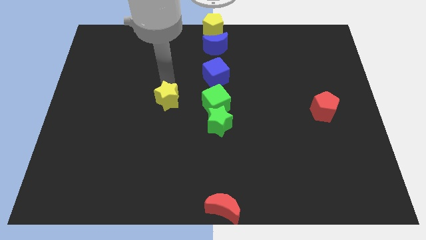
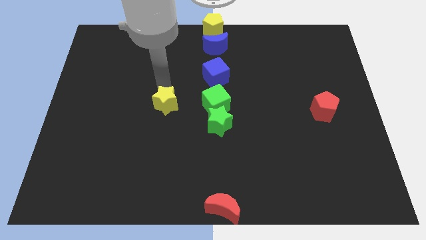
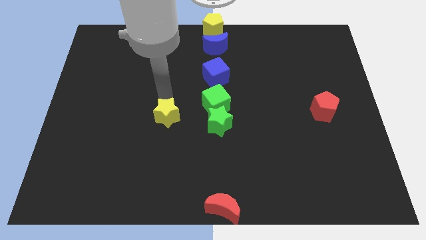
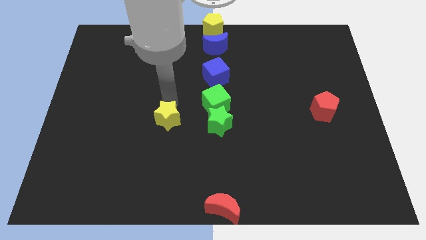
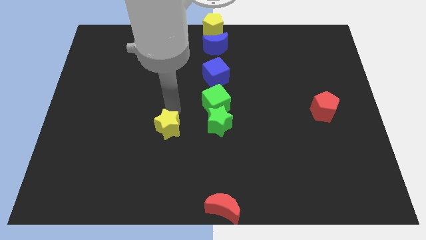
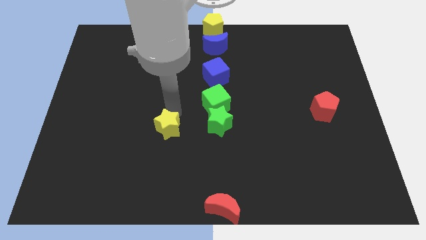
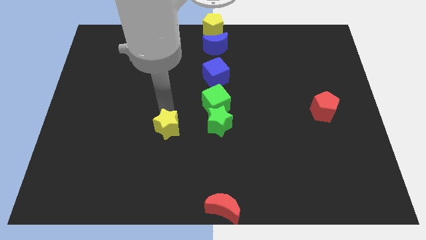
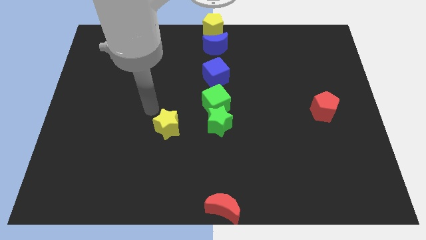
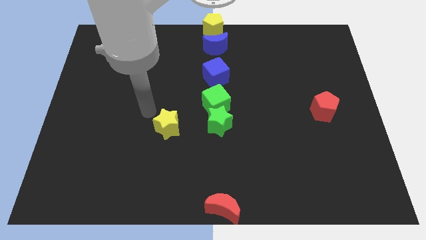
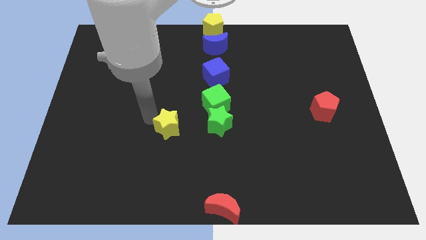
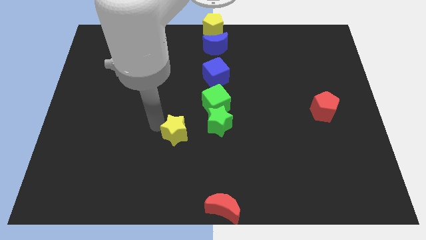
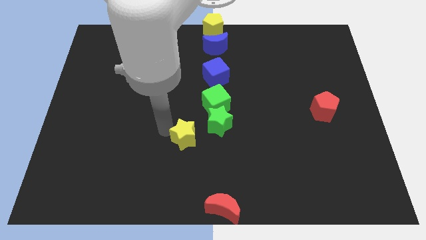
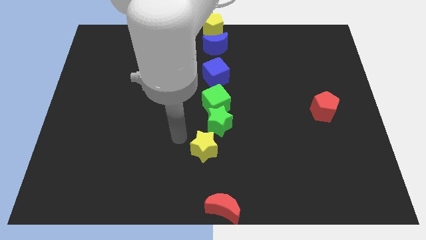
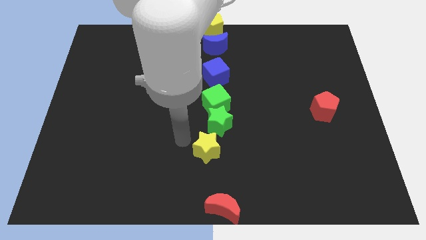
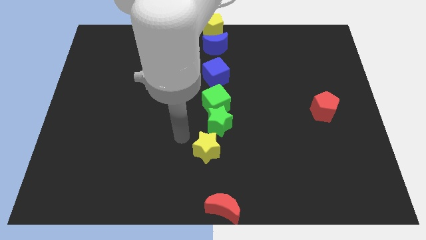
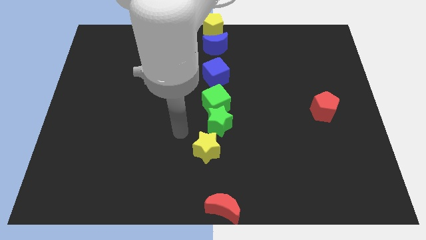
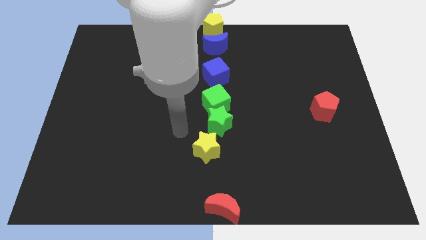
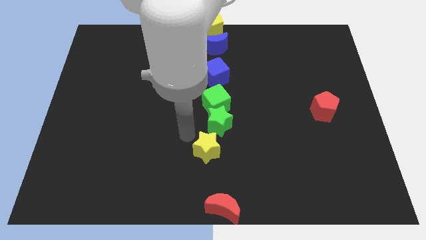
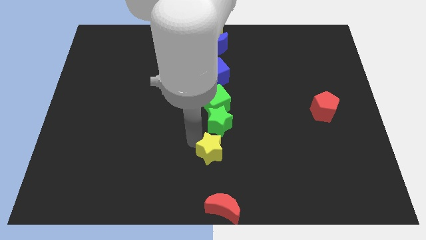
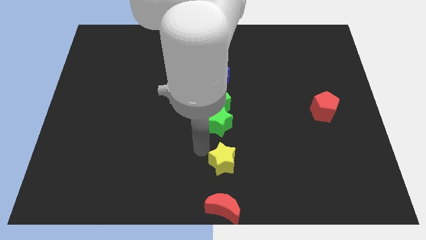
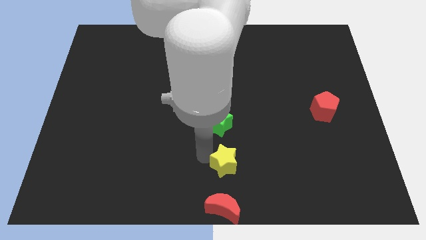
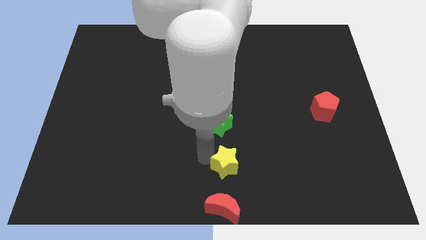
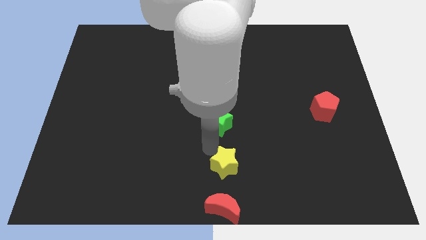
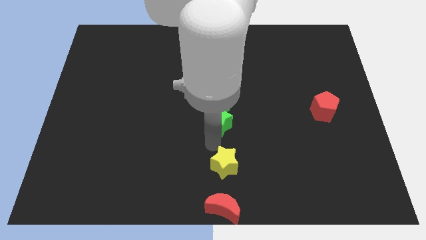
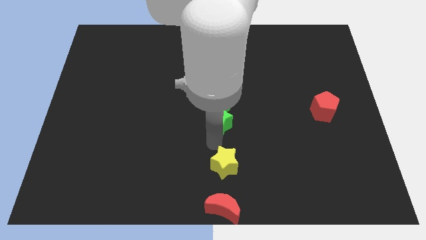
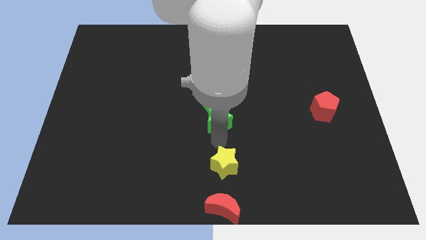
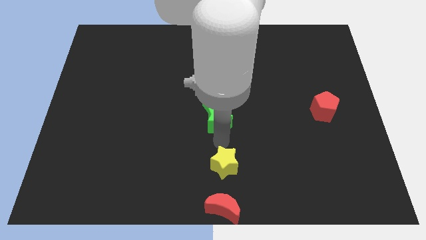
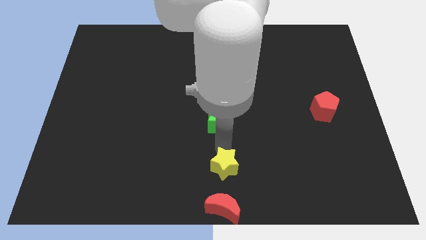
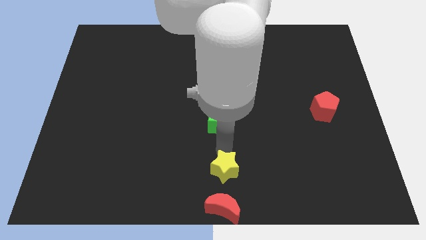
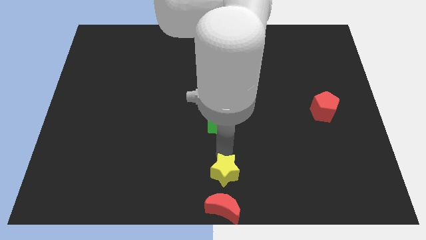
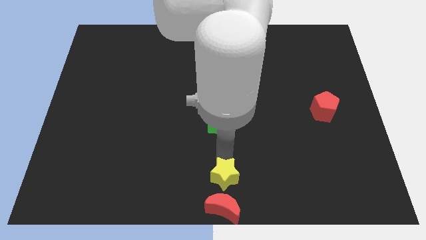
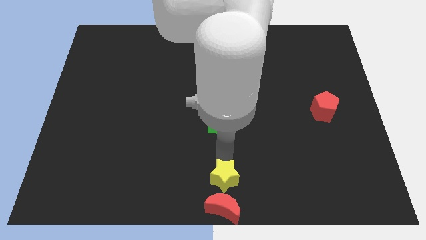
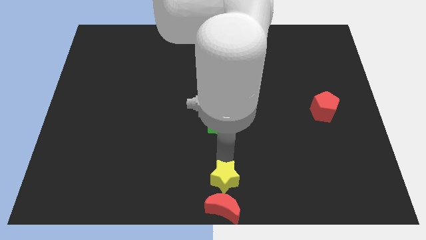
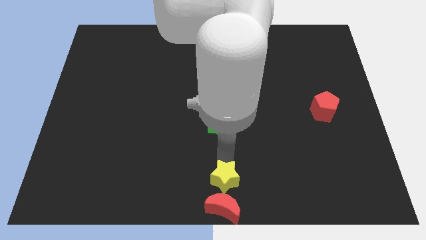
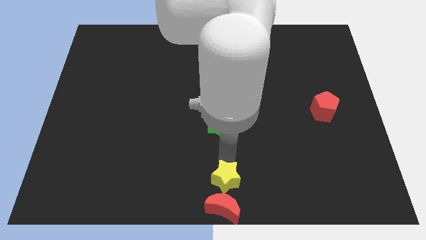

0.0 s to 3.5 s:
place the yellow star to the top of red crescent

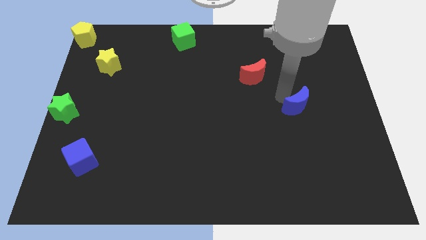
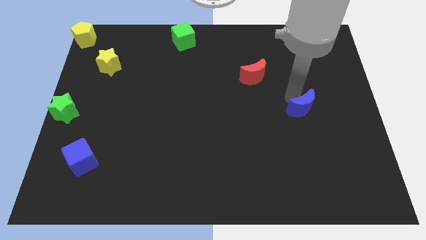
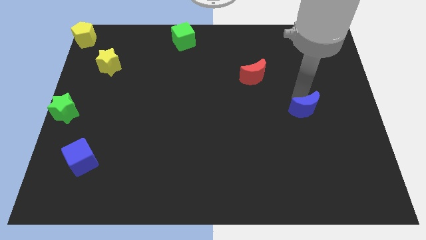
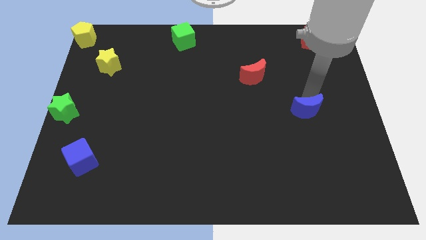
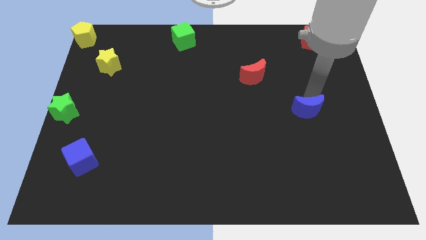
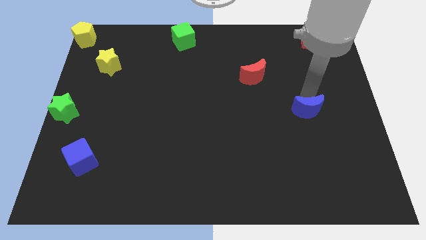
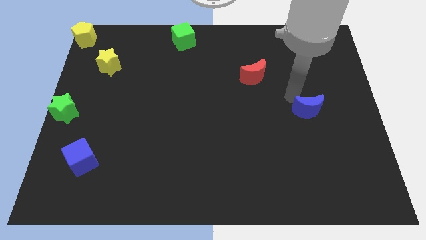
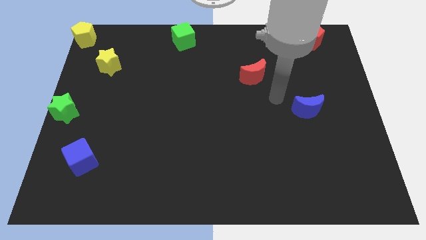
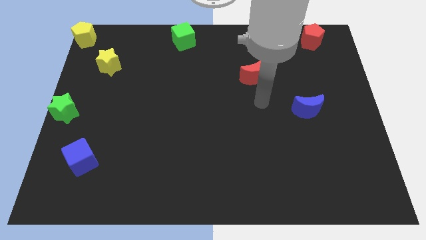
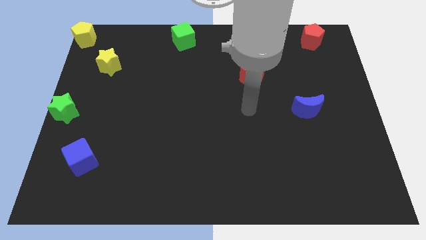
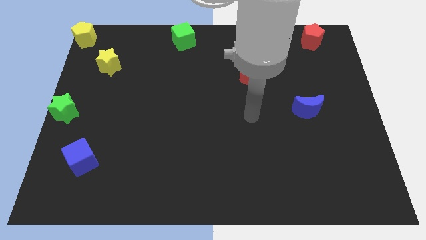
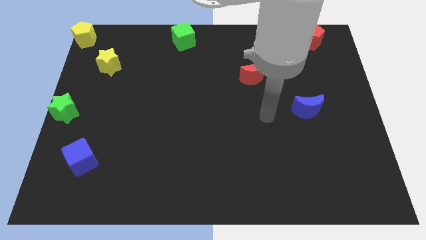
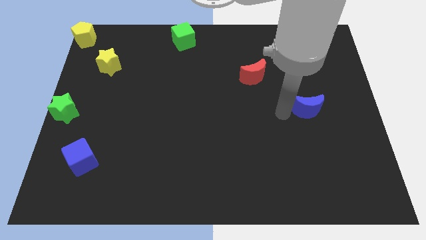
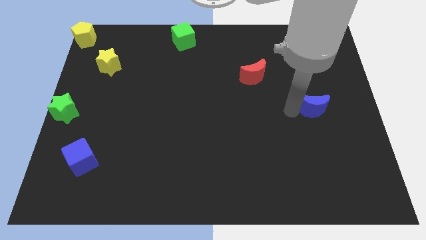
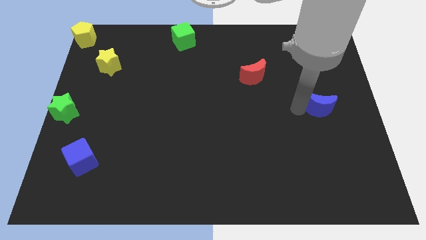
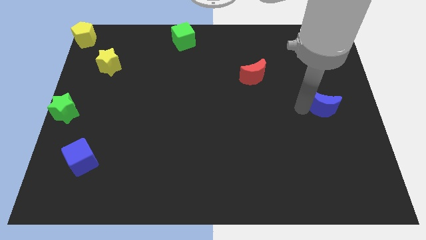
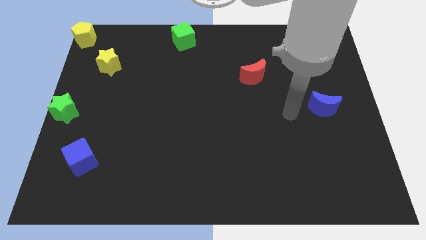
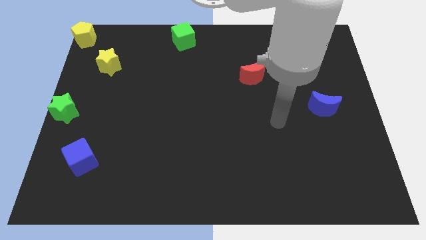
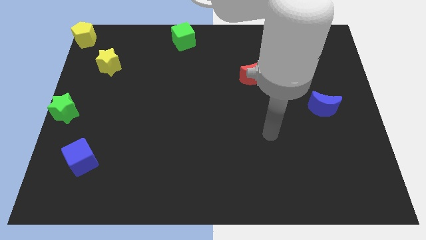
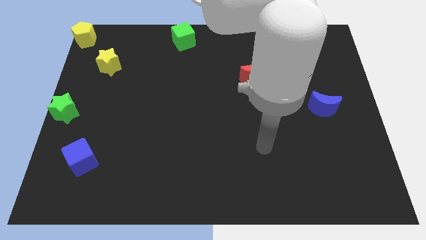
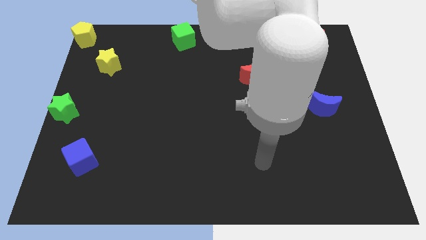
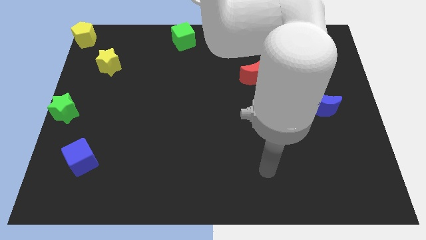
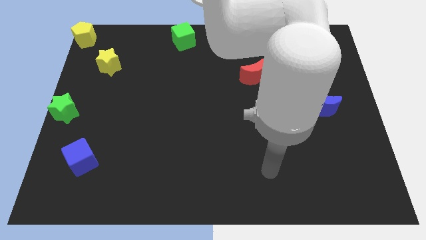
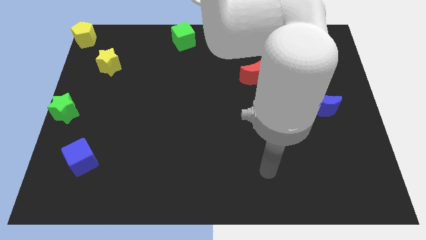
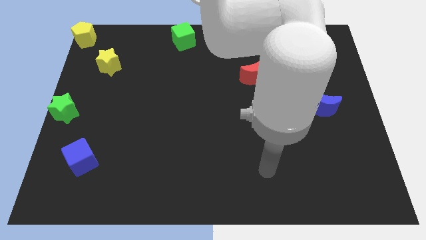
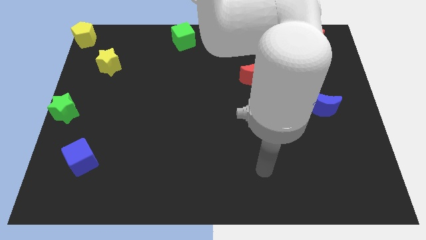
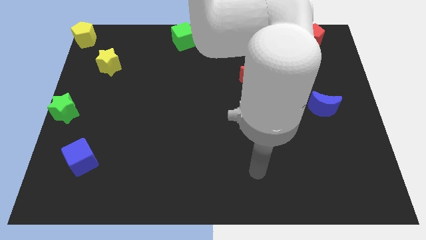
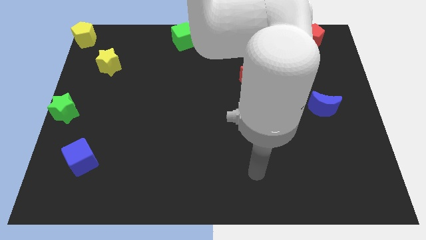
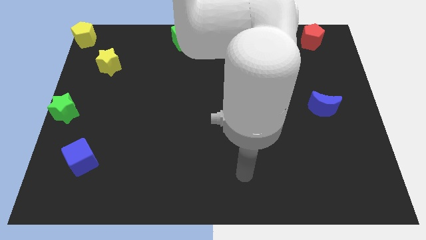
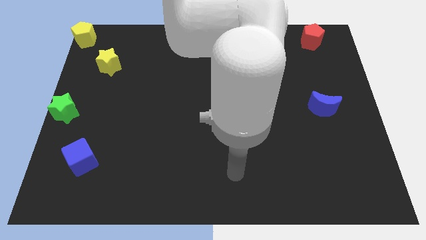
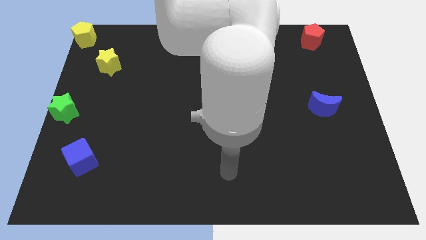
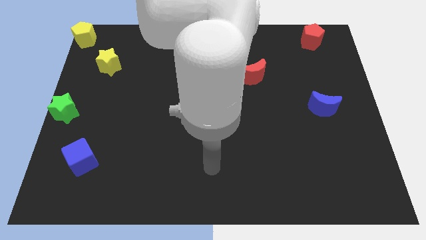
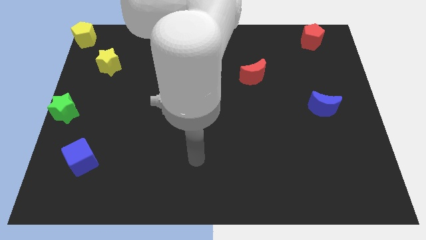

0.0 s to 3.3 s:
slightly push the blue crescent towards the center right of the board

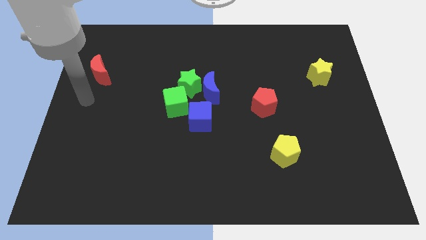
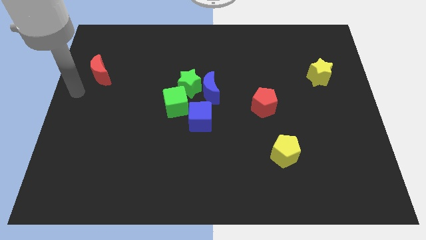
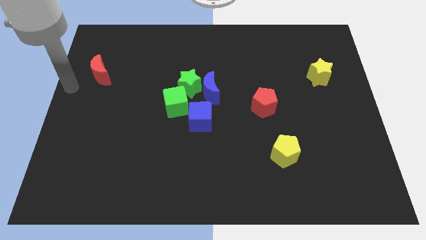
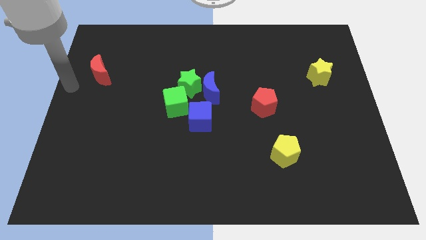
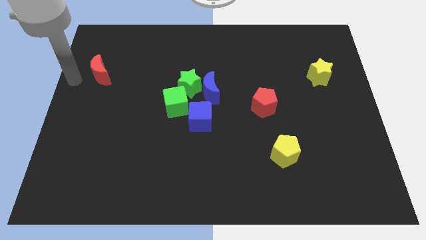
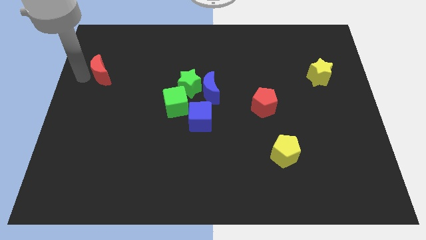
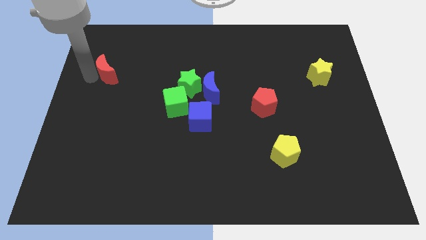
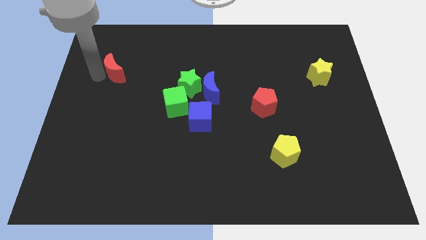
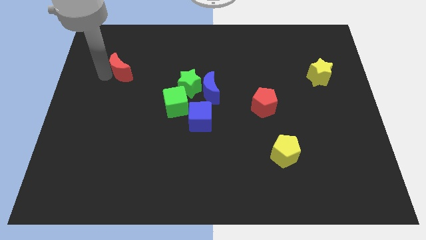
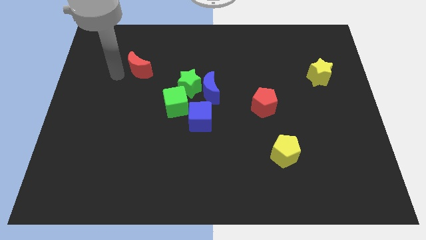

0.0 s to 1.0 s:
move red moon slightly right

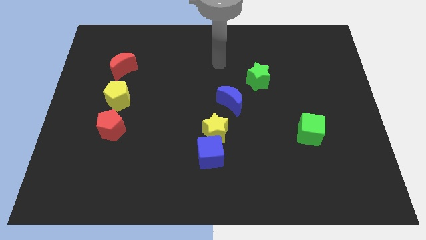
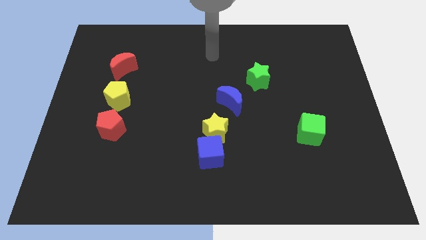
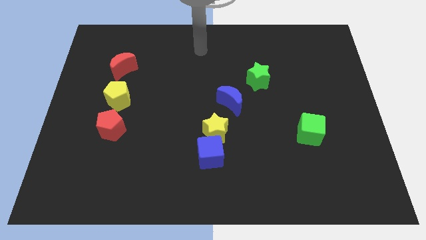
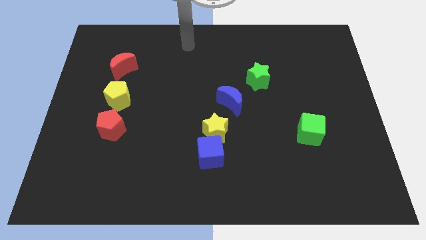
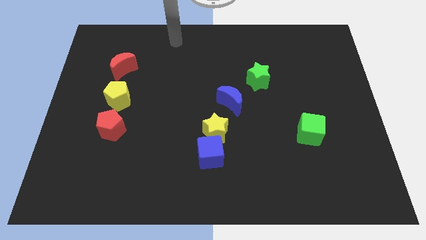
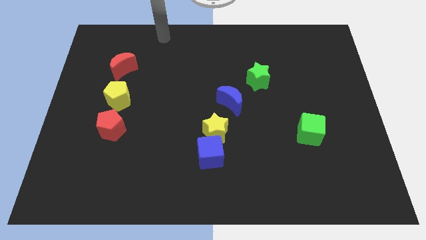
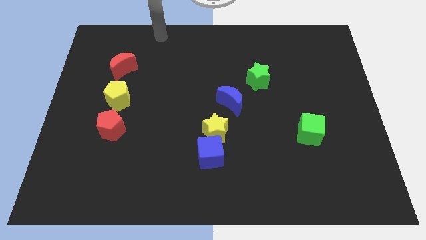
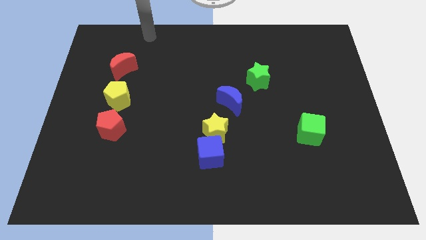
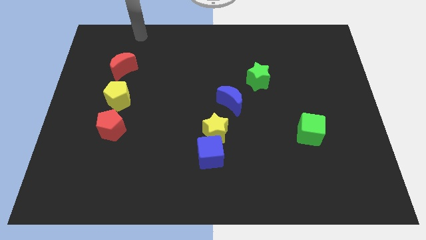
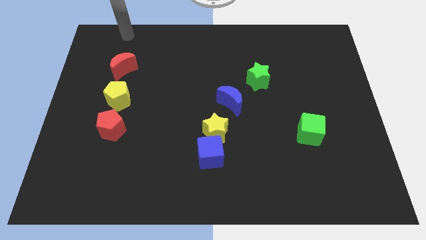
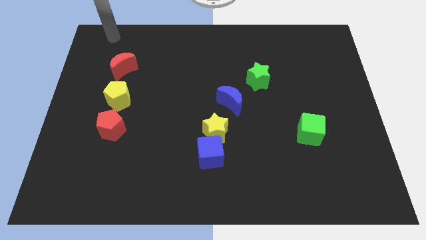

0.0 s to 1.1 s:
point your arm above the red moon
